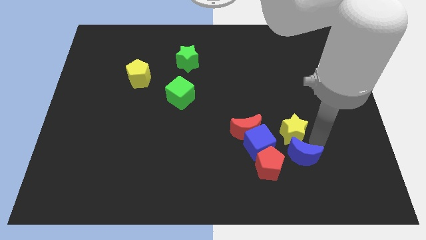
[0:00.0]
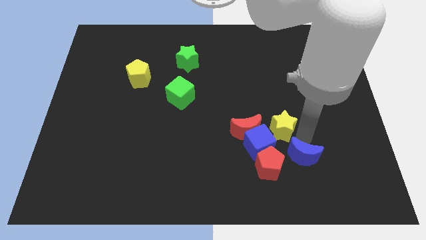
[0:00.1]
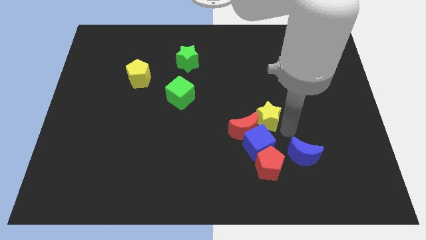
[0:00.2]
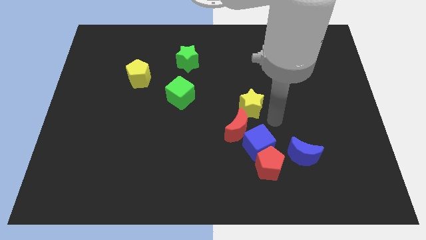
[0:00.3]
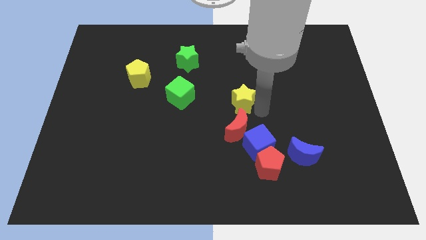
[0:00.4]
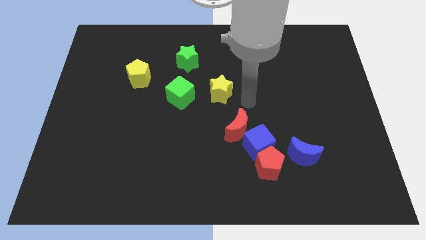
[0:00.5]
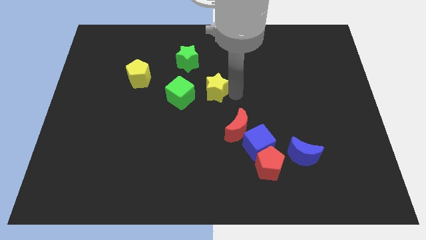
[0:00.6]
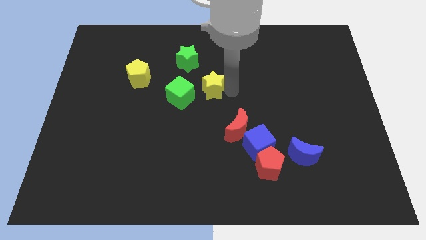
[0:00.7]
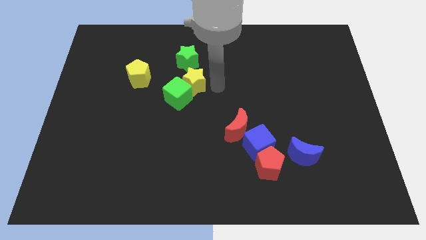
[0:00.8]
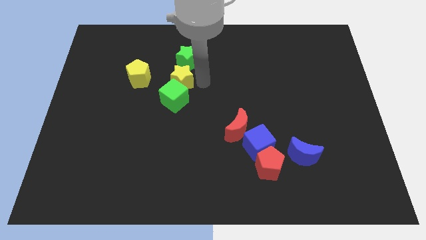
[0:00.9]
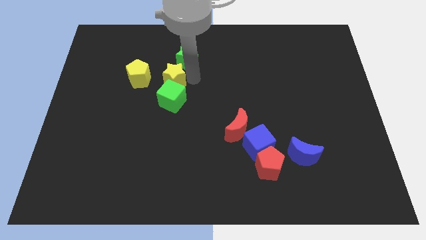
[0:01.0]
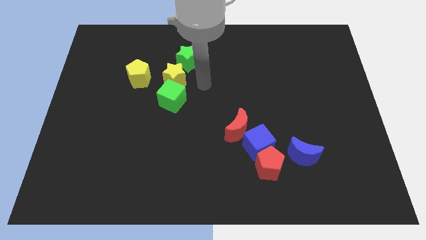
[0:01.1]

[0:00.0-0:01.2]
place the yellow star in between the green star and green cube

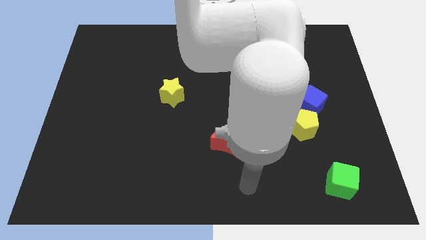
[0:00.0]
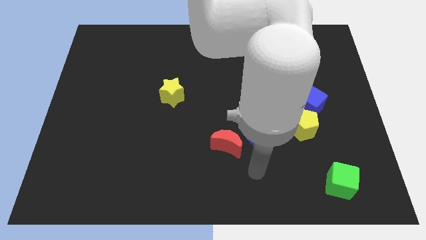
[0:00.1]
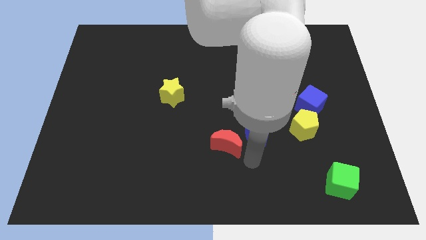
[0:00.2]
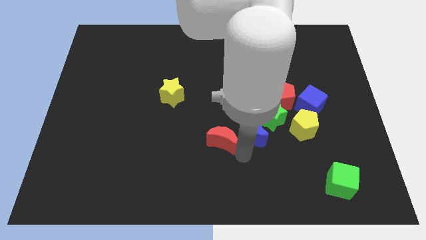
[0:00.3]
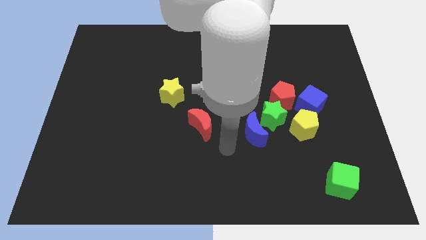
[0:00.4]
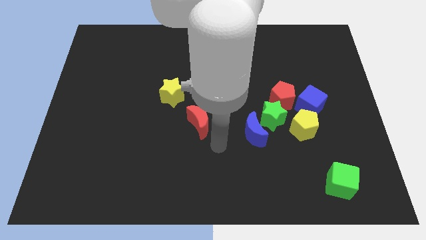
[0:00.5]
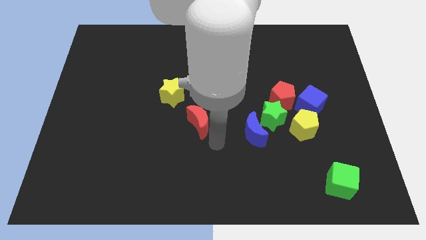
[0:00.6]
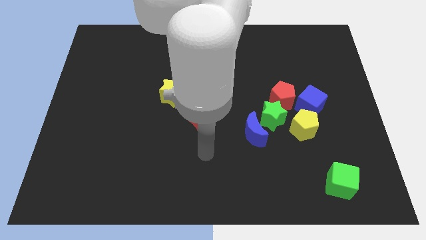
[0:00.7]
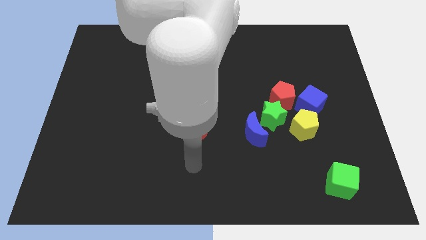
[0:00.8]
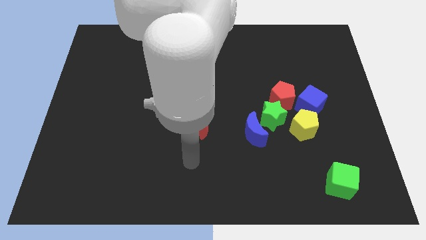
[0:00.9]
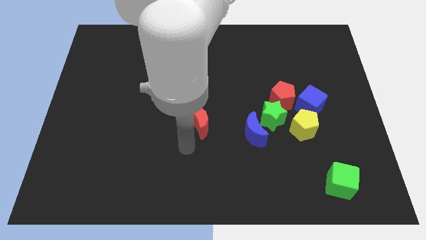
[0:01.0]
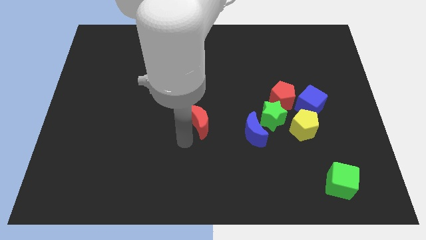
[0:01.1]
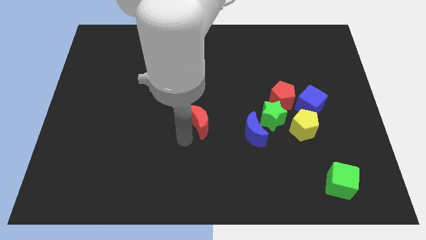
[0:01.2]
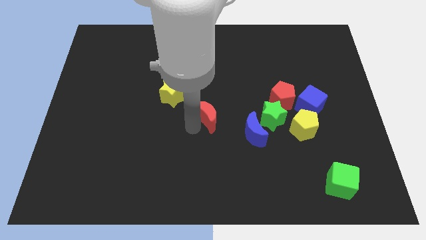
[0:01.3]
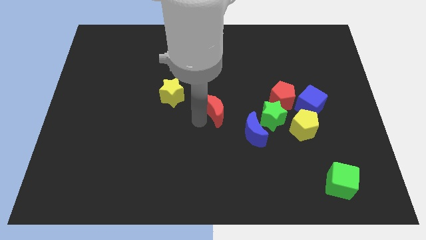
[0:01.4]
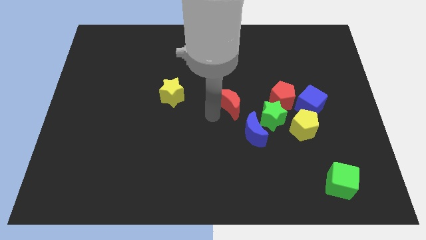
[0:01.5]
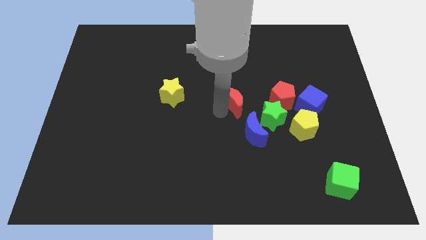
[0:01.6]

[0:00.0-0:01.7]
push the red crescent to the left of the red pentagon

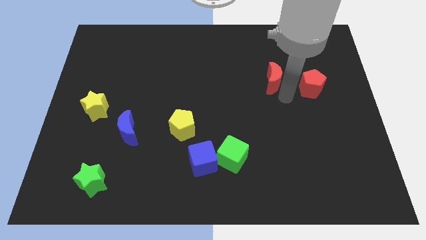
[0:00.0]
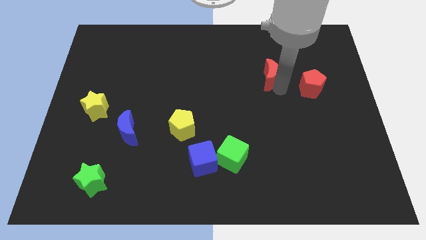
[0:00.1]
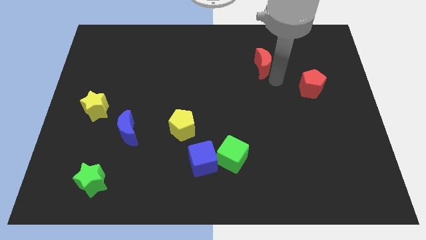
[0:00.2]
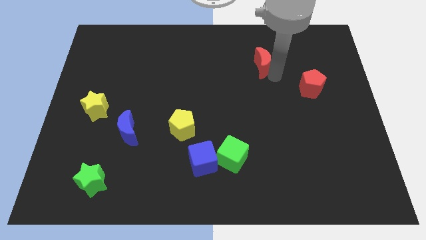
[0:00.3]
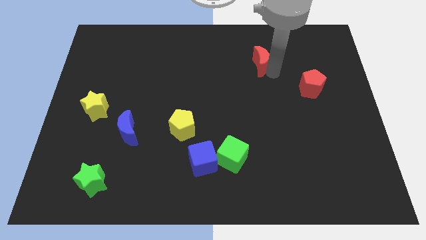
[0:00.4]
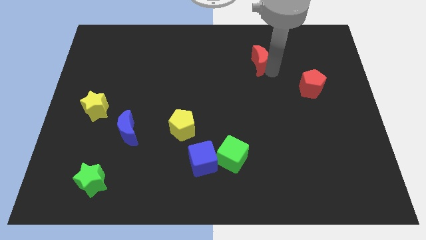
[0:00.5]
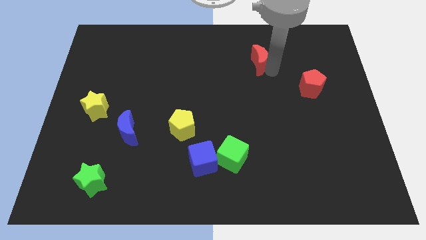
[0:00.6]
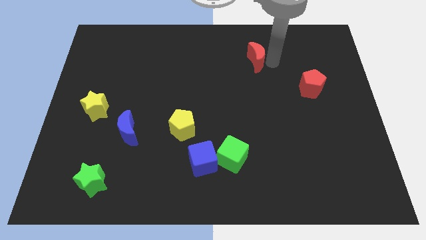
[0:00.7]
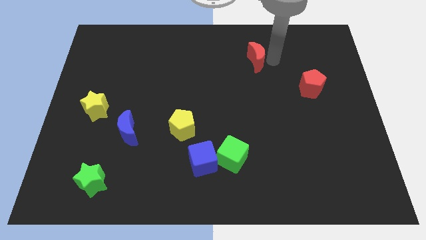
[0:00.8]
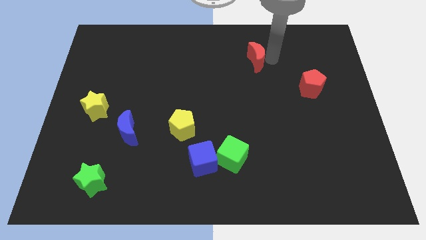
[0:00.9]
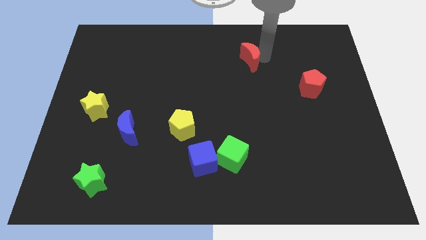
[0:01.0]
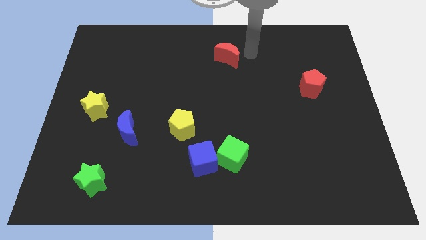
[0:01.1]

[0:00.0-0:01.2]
push the red moon towards the left side of the board

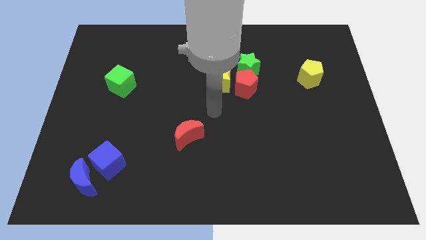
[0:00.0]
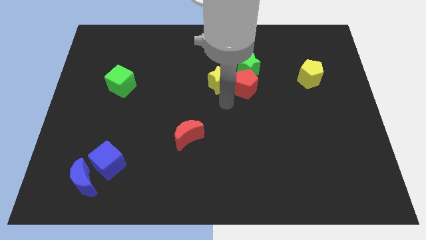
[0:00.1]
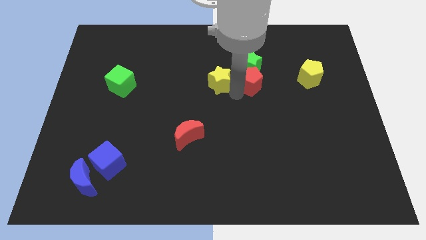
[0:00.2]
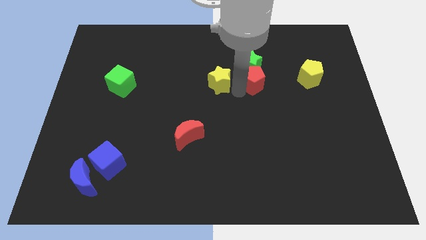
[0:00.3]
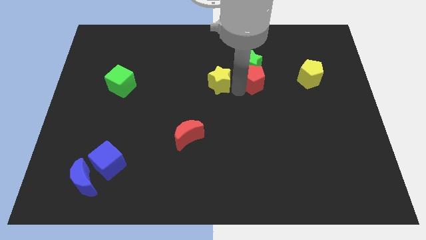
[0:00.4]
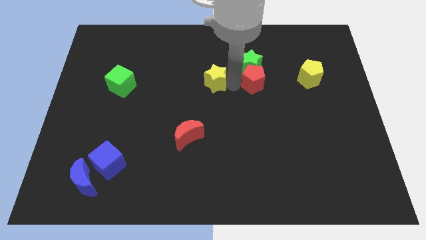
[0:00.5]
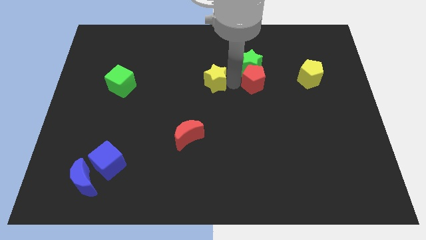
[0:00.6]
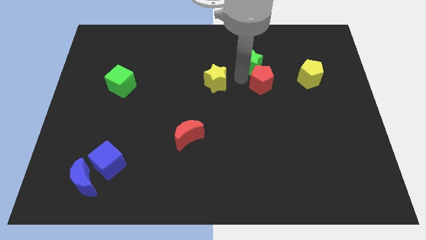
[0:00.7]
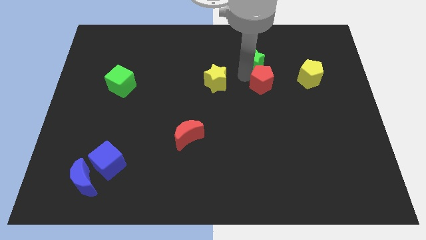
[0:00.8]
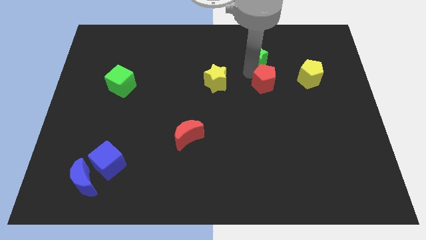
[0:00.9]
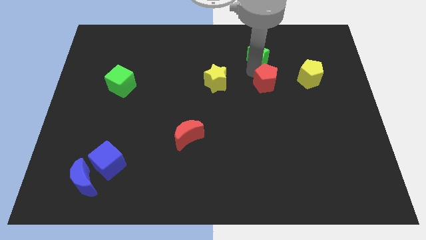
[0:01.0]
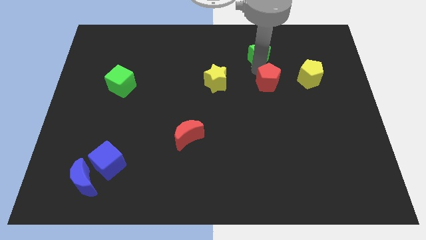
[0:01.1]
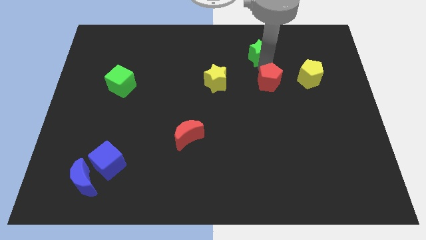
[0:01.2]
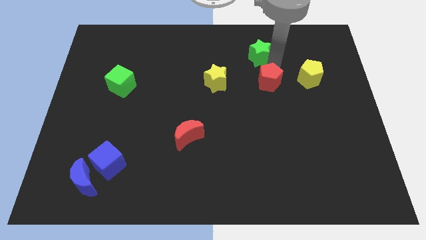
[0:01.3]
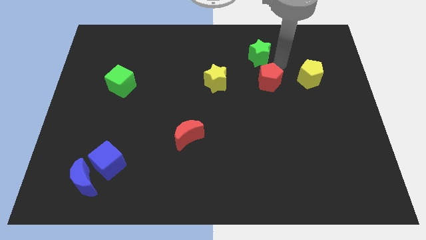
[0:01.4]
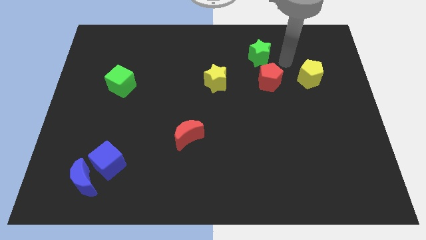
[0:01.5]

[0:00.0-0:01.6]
separate the green star and red pentagon from each other

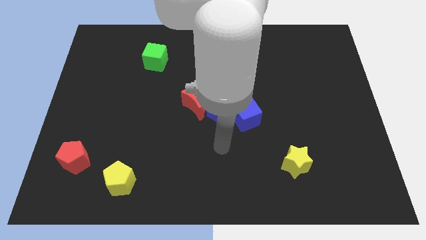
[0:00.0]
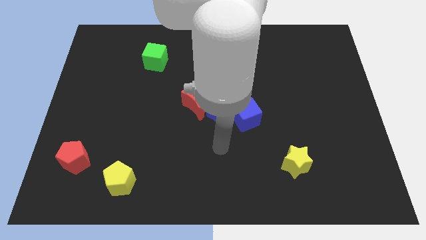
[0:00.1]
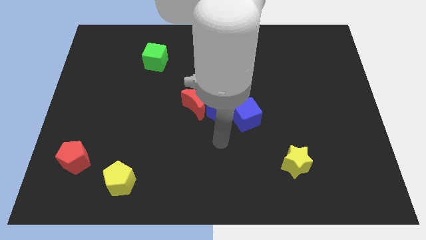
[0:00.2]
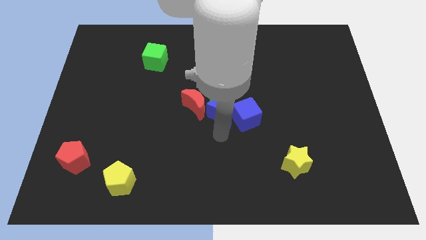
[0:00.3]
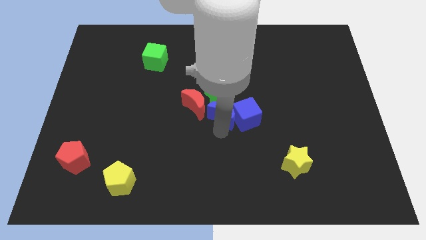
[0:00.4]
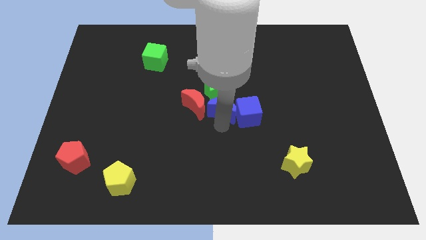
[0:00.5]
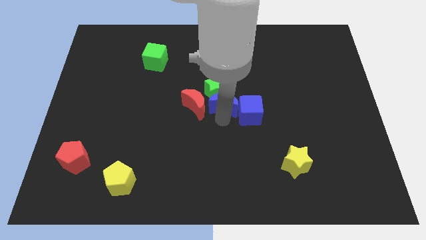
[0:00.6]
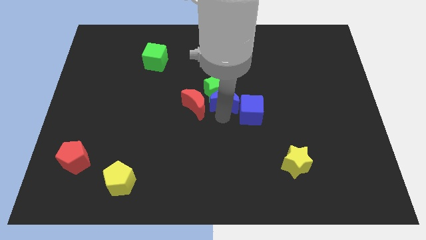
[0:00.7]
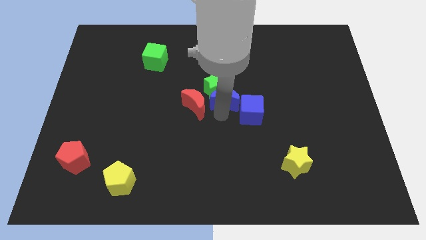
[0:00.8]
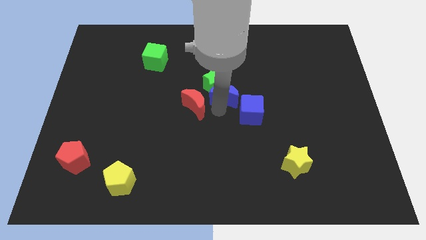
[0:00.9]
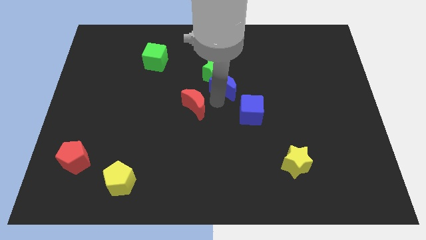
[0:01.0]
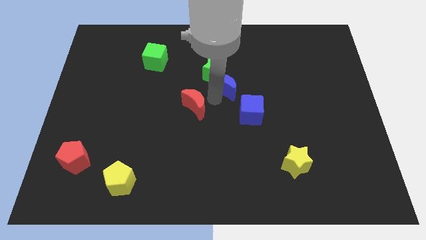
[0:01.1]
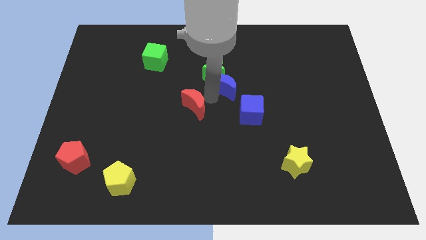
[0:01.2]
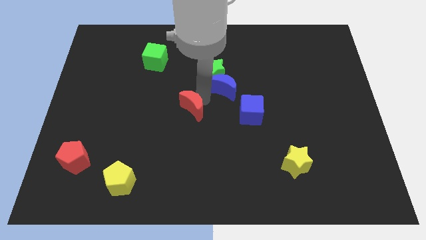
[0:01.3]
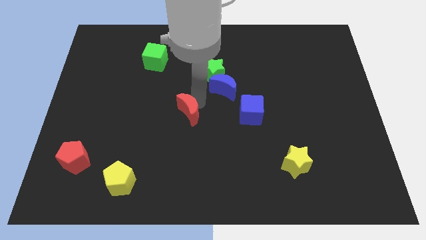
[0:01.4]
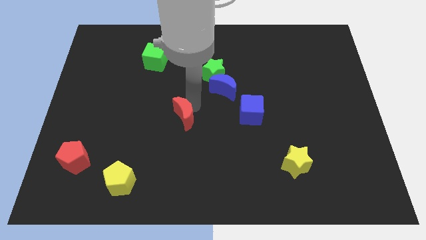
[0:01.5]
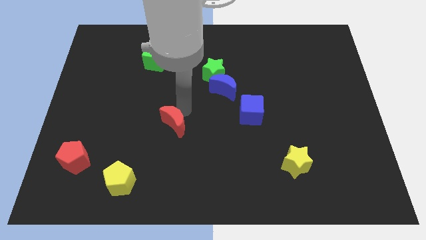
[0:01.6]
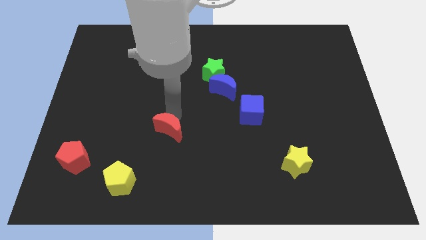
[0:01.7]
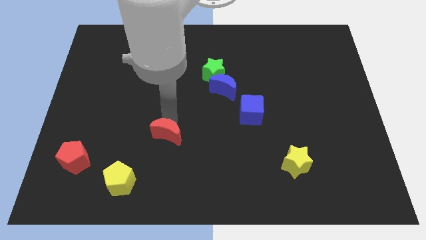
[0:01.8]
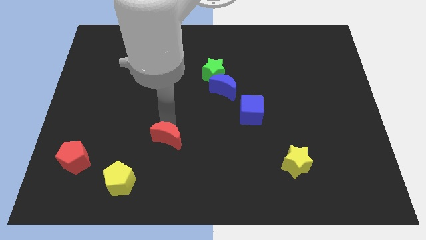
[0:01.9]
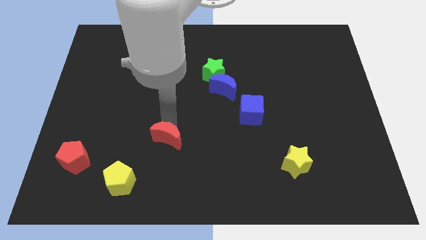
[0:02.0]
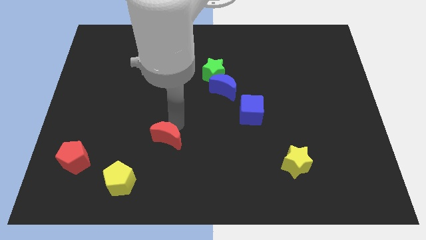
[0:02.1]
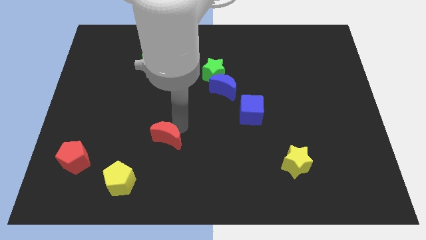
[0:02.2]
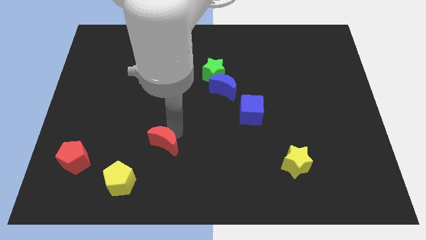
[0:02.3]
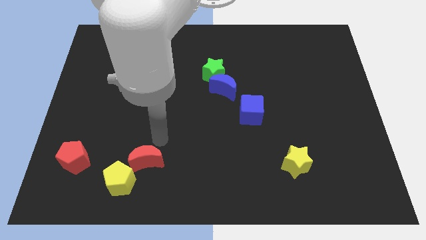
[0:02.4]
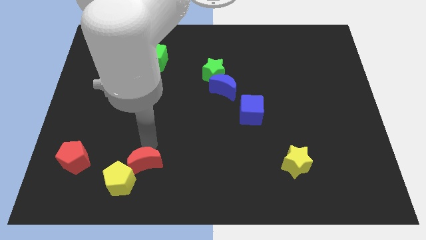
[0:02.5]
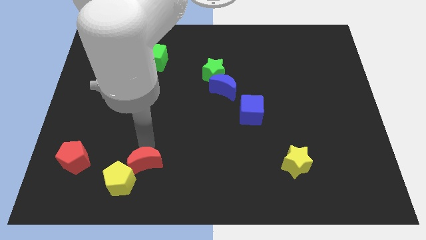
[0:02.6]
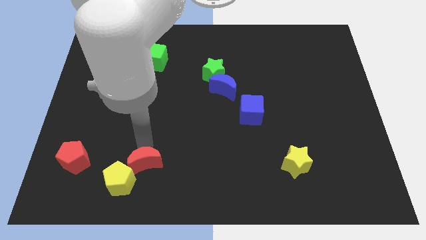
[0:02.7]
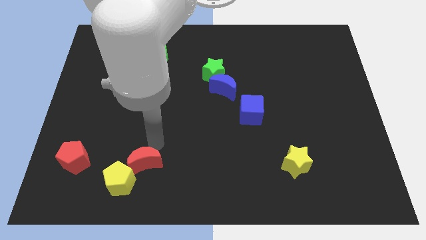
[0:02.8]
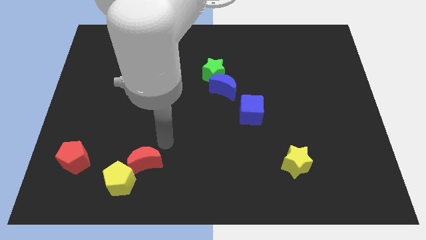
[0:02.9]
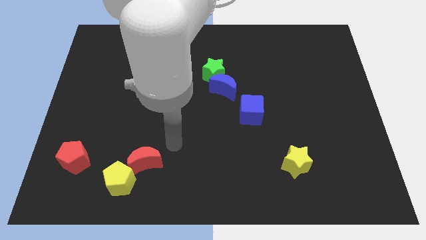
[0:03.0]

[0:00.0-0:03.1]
separate red moon from blue moon
